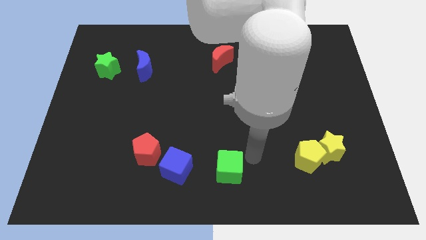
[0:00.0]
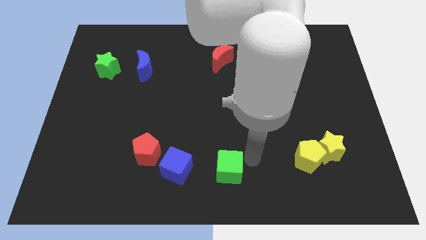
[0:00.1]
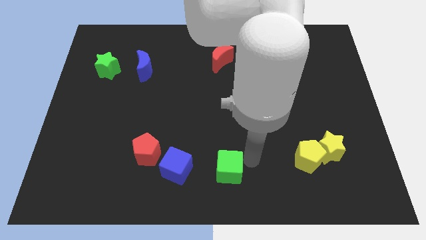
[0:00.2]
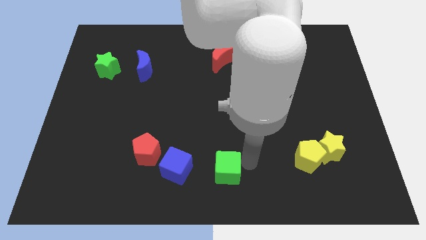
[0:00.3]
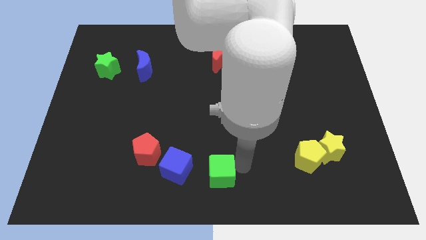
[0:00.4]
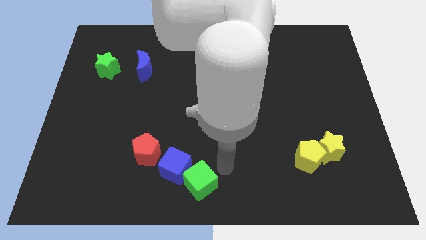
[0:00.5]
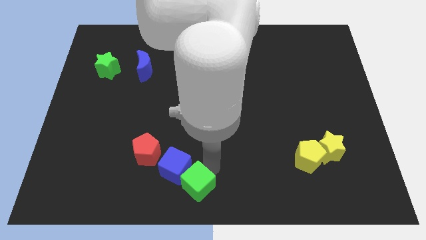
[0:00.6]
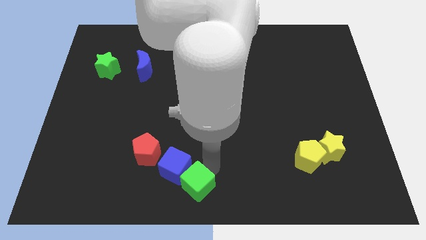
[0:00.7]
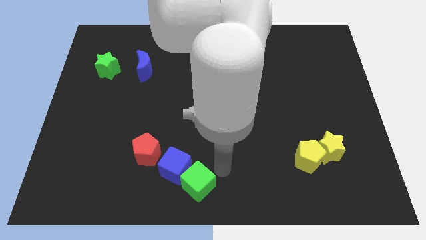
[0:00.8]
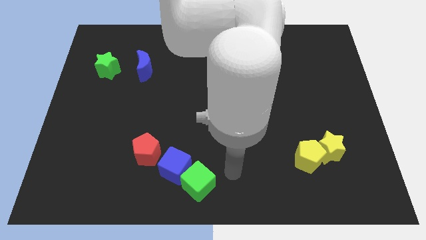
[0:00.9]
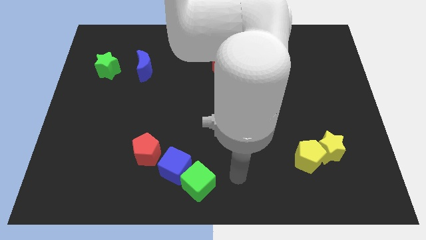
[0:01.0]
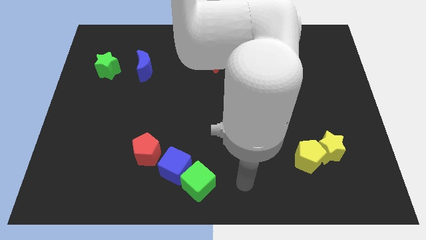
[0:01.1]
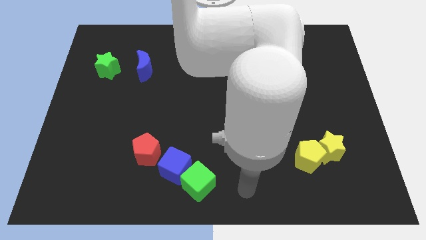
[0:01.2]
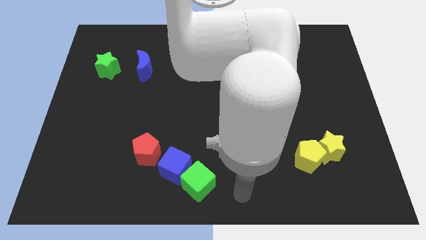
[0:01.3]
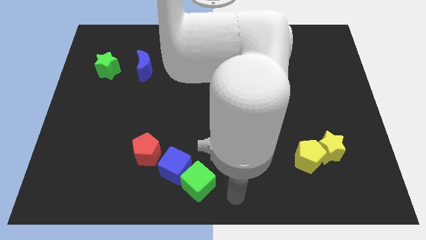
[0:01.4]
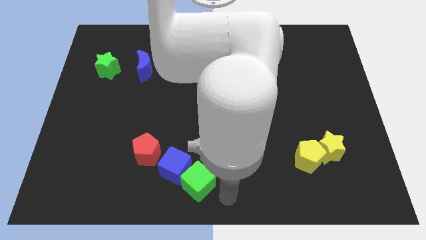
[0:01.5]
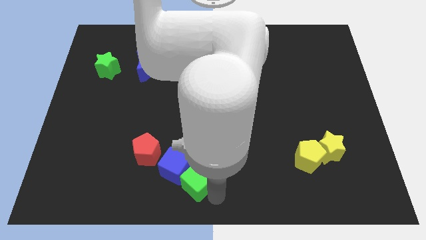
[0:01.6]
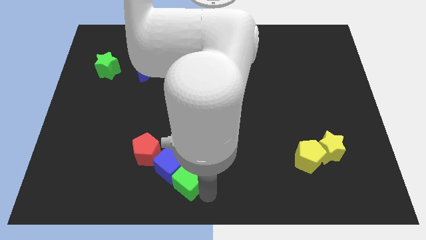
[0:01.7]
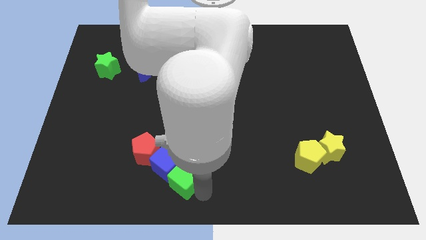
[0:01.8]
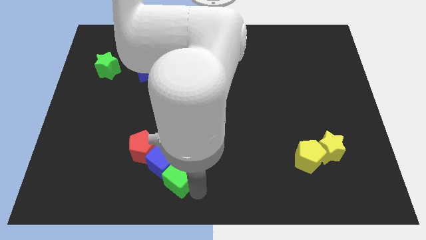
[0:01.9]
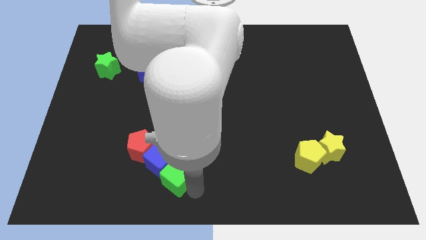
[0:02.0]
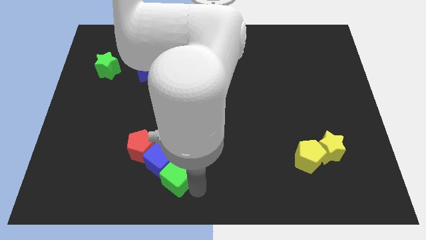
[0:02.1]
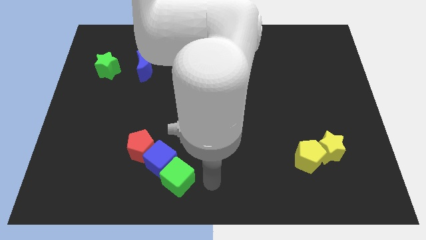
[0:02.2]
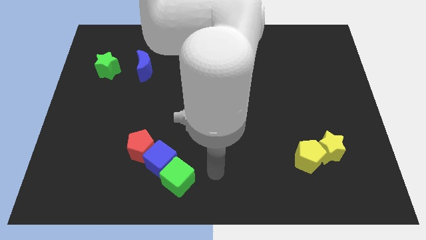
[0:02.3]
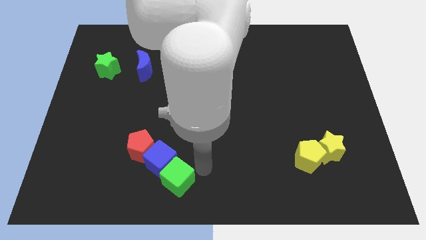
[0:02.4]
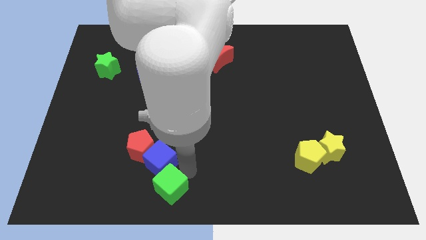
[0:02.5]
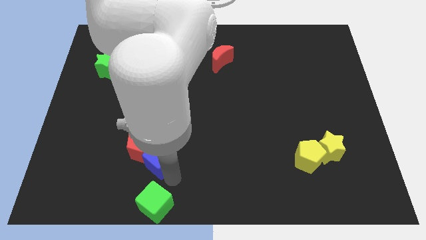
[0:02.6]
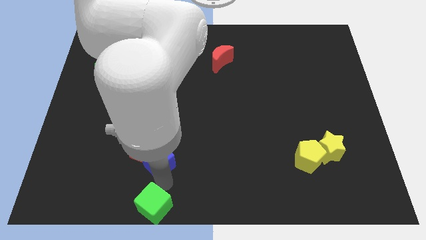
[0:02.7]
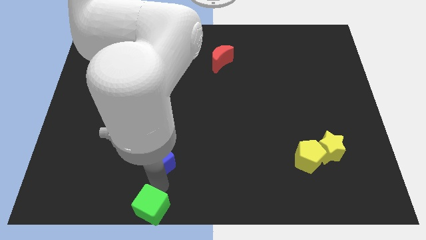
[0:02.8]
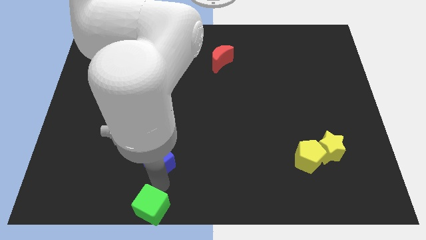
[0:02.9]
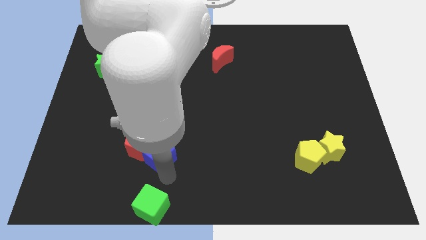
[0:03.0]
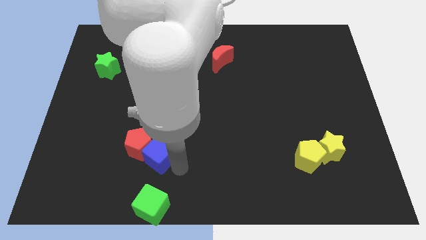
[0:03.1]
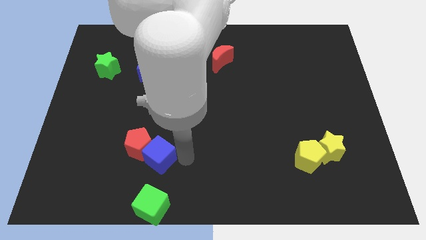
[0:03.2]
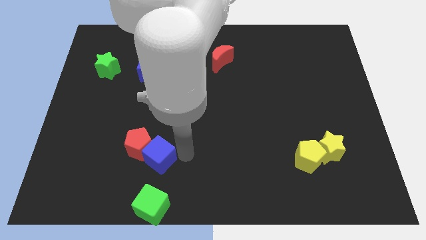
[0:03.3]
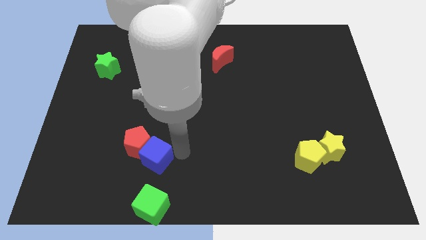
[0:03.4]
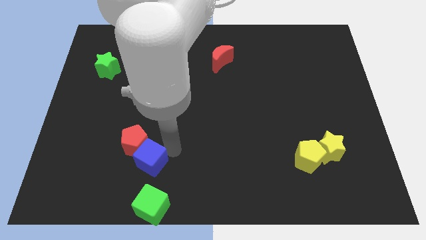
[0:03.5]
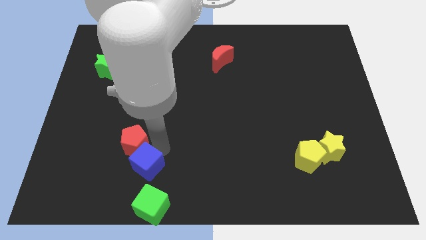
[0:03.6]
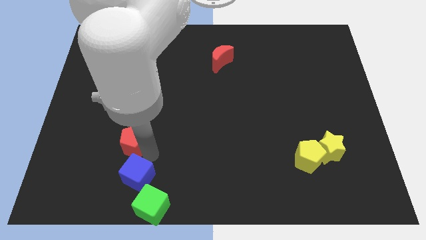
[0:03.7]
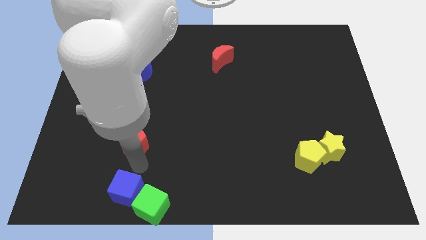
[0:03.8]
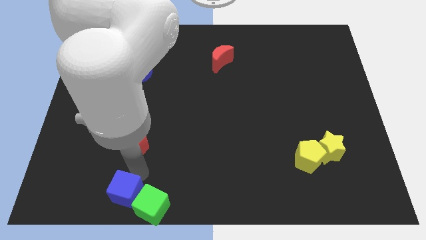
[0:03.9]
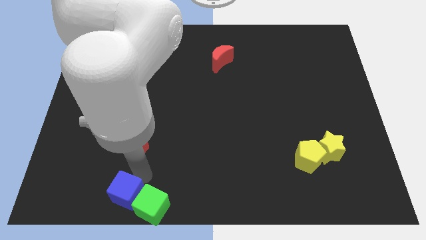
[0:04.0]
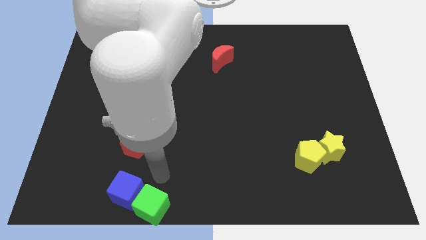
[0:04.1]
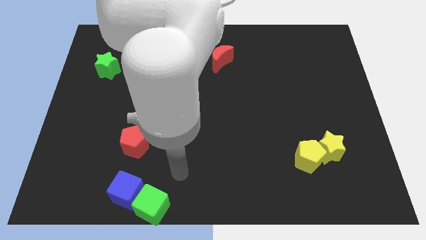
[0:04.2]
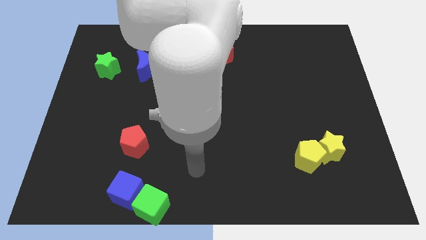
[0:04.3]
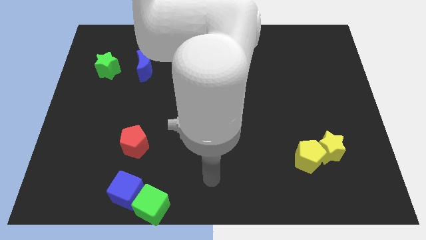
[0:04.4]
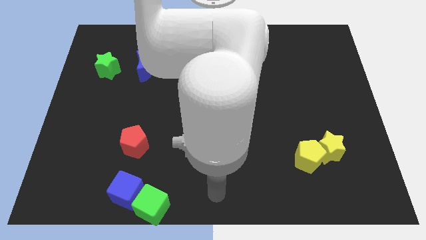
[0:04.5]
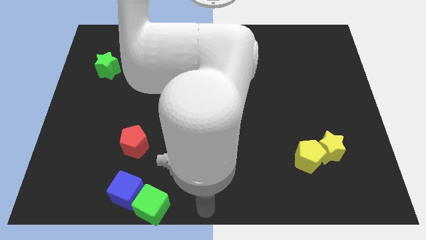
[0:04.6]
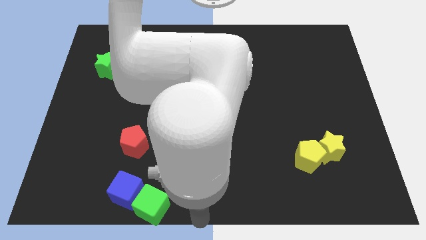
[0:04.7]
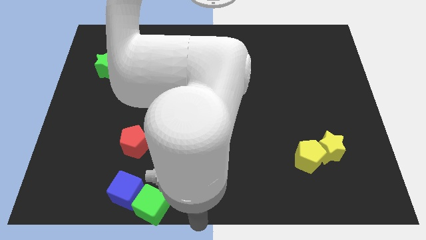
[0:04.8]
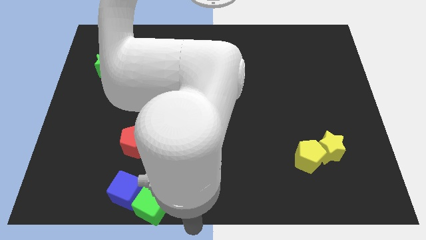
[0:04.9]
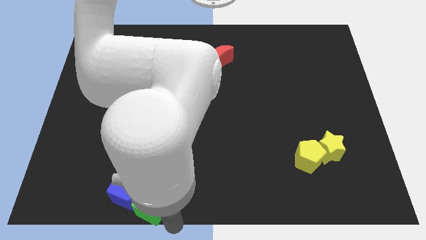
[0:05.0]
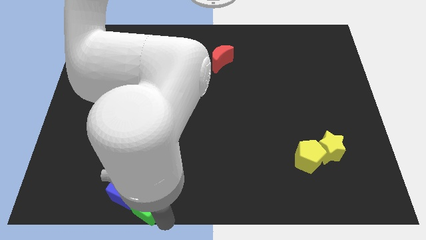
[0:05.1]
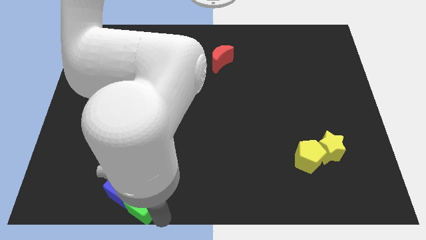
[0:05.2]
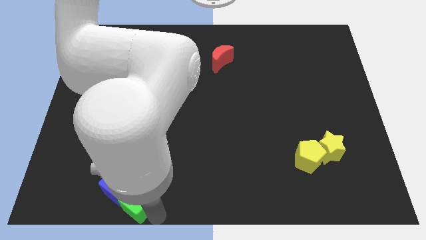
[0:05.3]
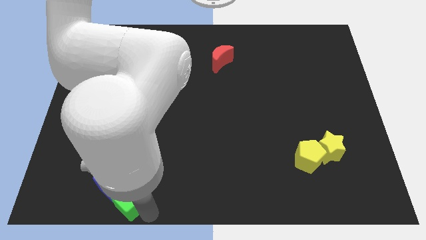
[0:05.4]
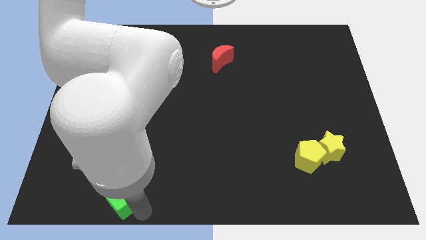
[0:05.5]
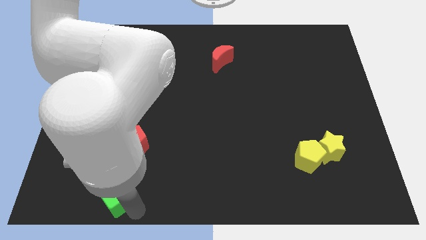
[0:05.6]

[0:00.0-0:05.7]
push the blue cube and green cube towards left

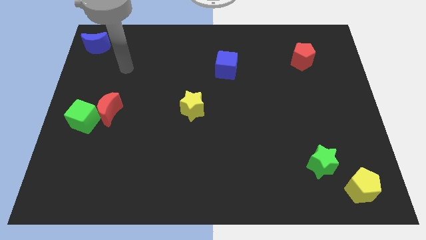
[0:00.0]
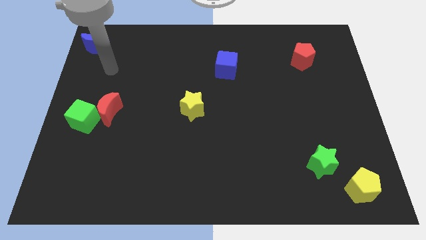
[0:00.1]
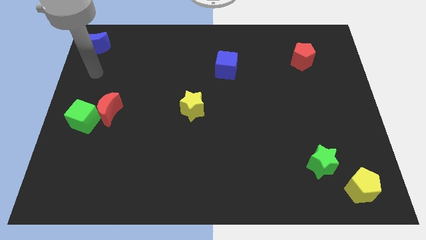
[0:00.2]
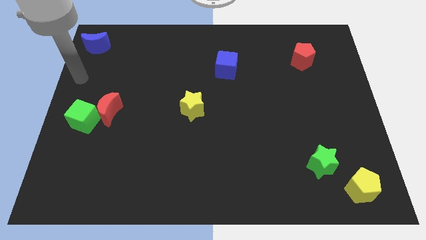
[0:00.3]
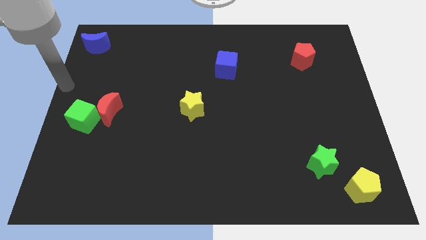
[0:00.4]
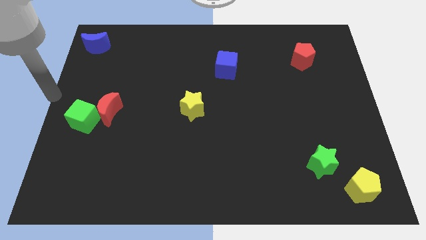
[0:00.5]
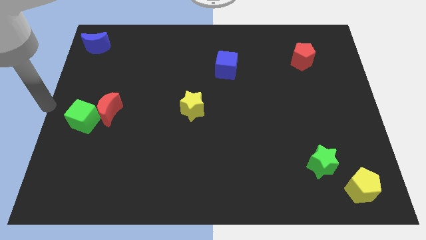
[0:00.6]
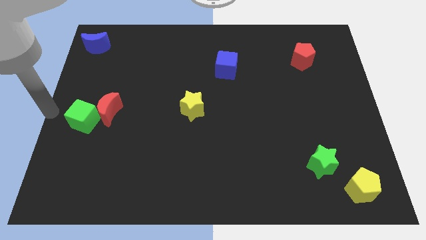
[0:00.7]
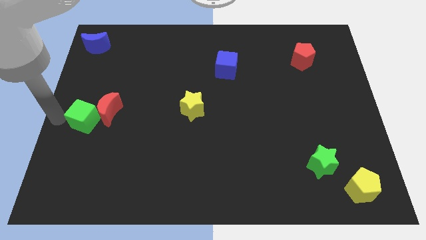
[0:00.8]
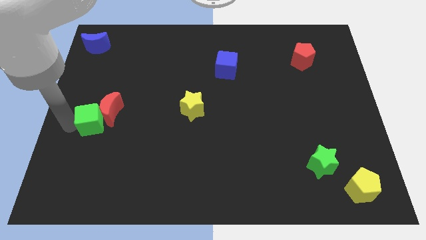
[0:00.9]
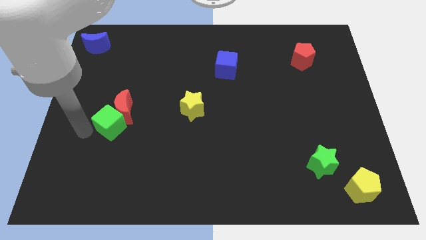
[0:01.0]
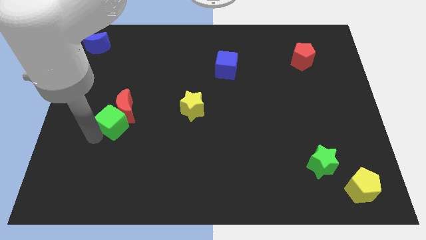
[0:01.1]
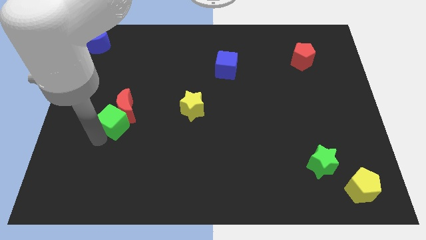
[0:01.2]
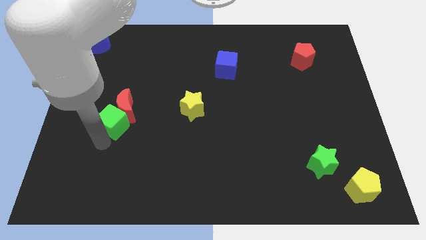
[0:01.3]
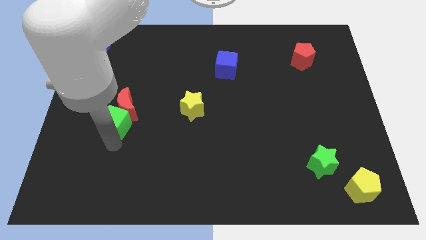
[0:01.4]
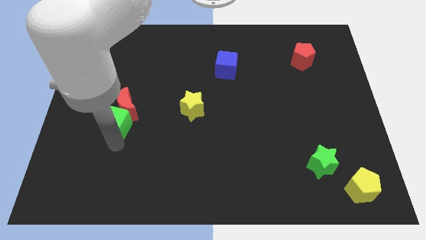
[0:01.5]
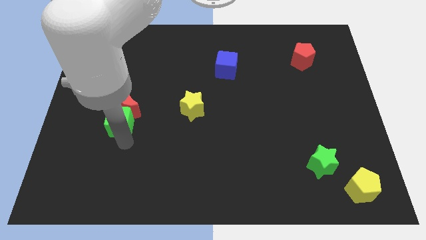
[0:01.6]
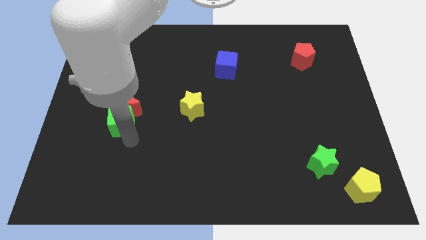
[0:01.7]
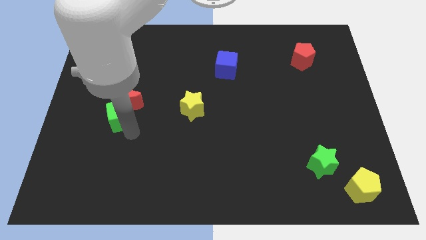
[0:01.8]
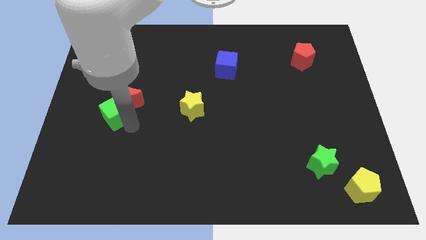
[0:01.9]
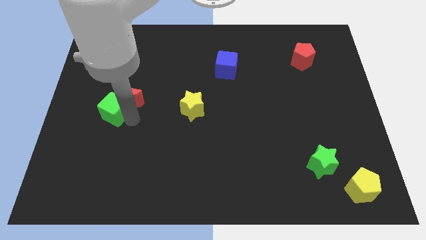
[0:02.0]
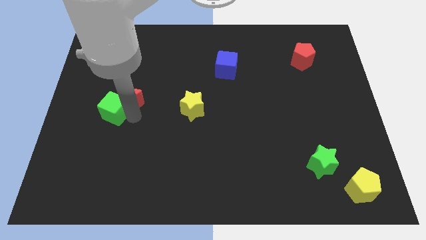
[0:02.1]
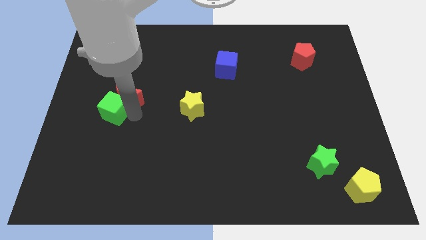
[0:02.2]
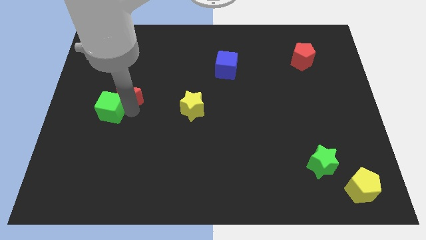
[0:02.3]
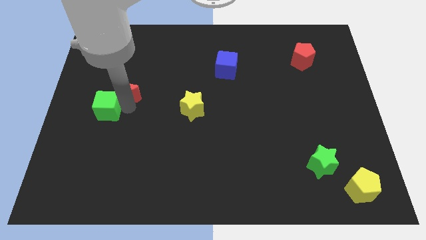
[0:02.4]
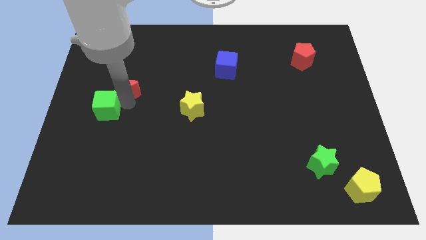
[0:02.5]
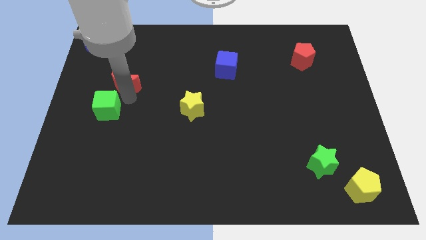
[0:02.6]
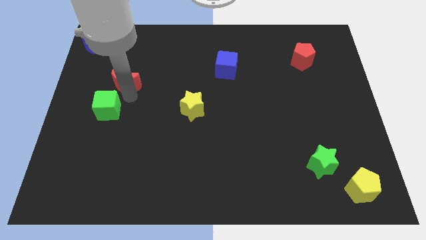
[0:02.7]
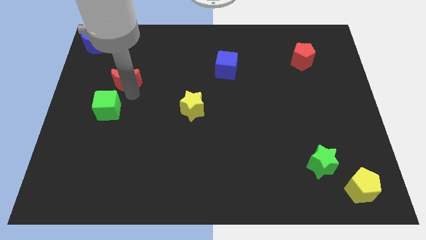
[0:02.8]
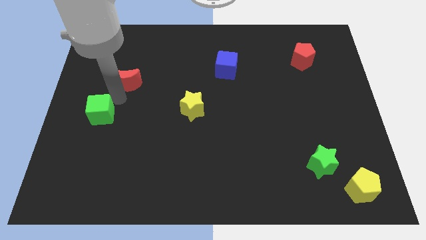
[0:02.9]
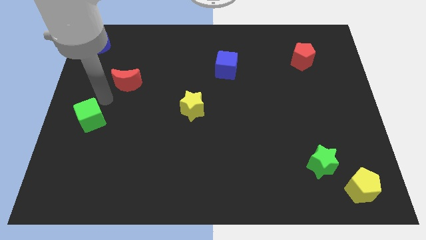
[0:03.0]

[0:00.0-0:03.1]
separate green cube and red moon

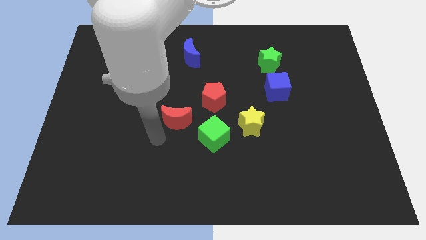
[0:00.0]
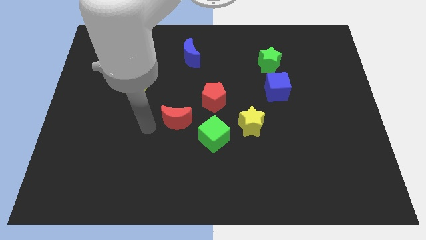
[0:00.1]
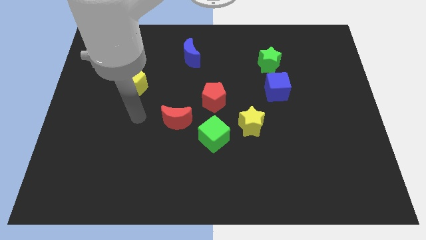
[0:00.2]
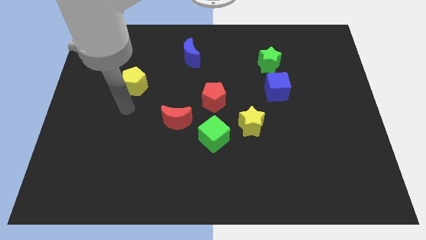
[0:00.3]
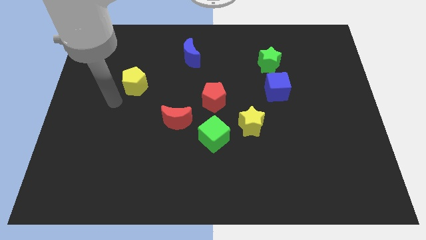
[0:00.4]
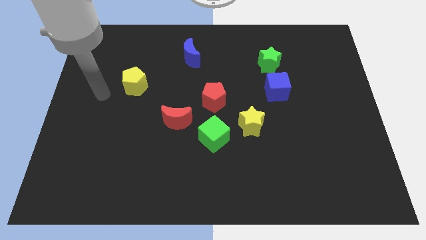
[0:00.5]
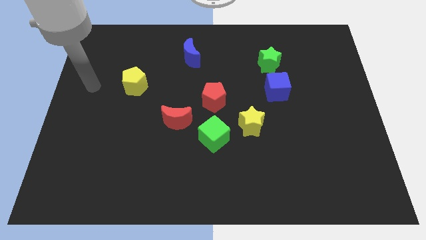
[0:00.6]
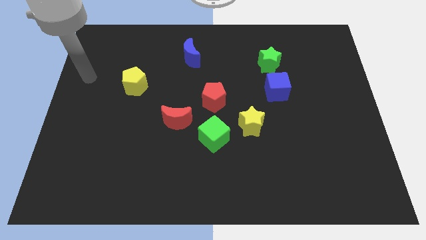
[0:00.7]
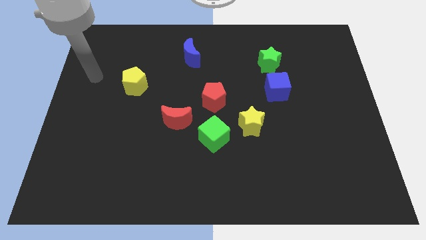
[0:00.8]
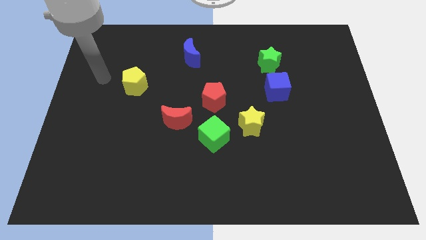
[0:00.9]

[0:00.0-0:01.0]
move the arm towards the yellow pentagon
